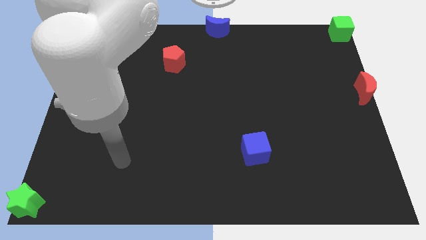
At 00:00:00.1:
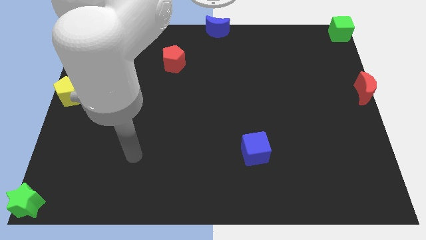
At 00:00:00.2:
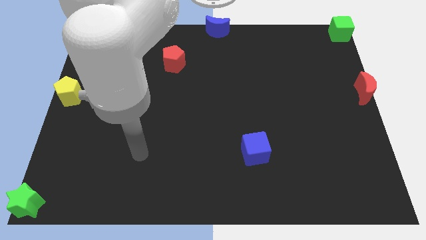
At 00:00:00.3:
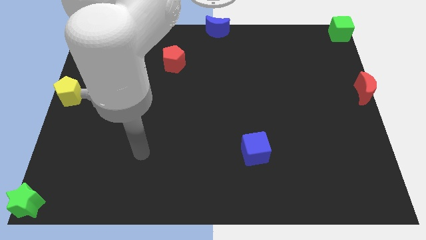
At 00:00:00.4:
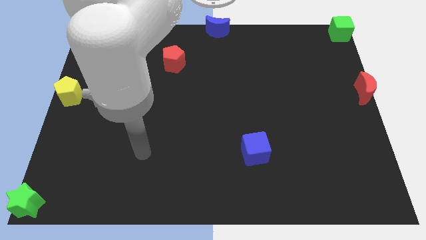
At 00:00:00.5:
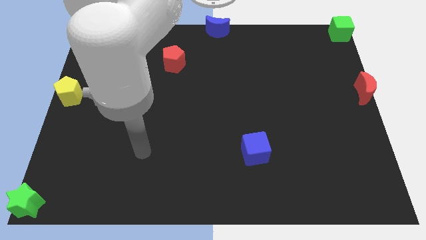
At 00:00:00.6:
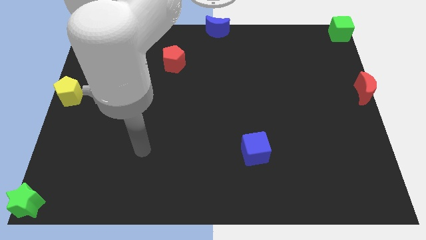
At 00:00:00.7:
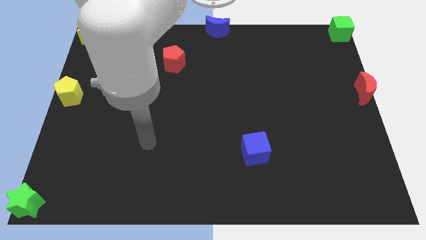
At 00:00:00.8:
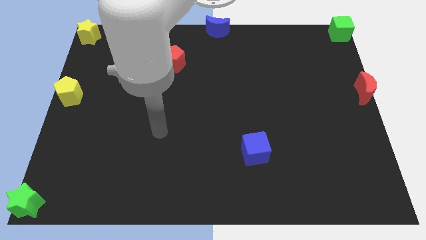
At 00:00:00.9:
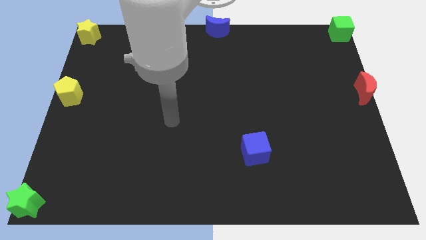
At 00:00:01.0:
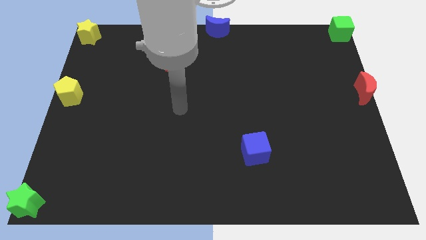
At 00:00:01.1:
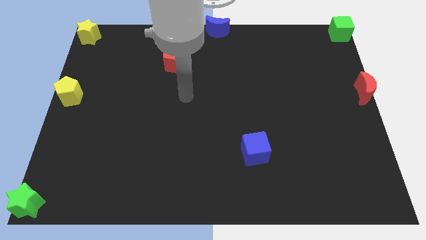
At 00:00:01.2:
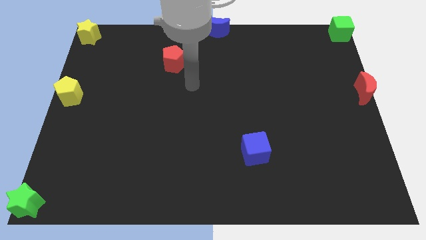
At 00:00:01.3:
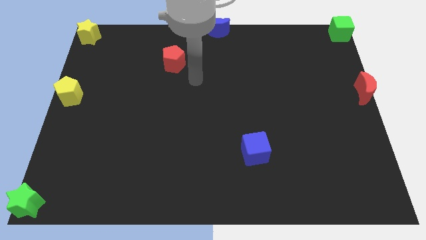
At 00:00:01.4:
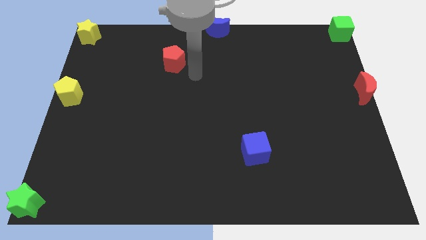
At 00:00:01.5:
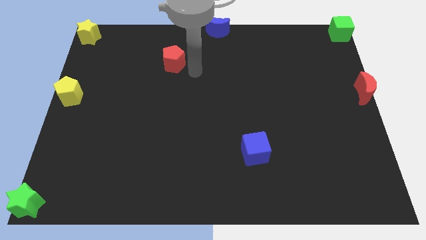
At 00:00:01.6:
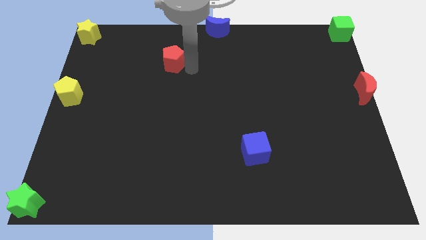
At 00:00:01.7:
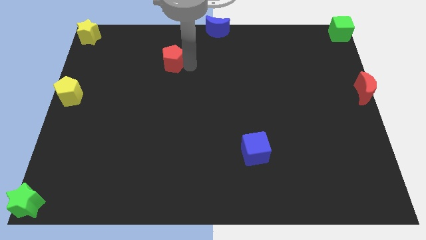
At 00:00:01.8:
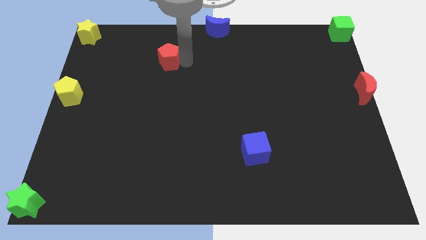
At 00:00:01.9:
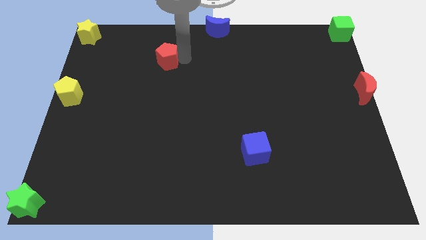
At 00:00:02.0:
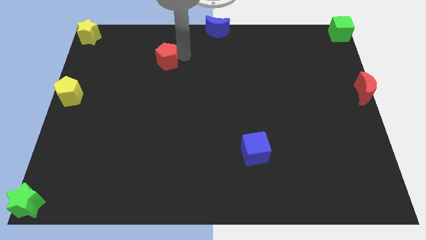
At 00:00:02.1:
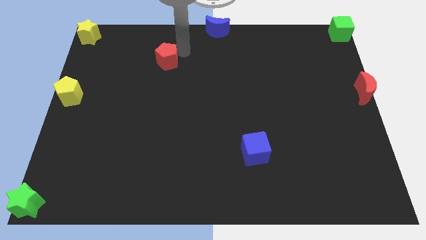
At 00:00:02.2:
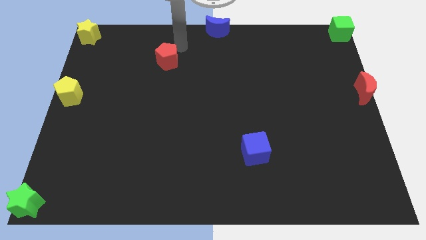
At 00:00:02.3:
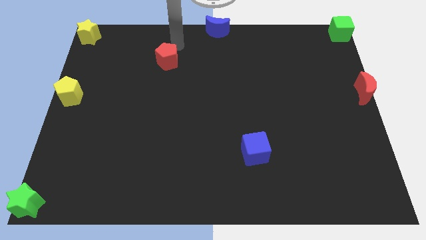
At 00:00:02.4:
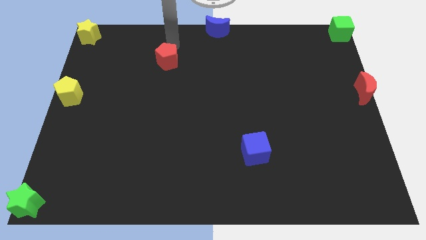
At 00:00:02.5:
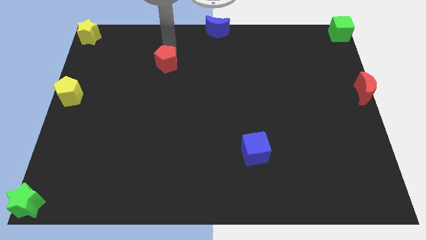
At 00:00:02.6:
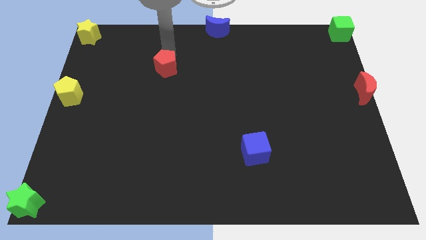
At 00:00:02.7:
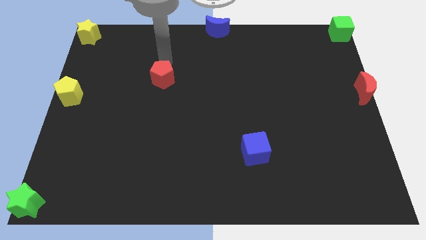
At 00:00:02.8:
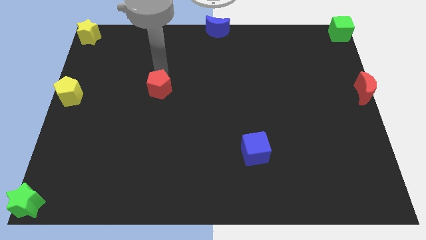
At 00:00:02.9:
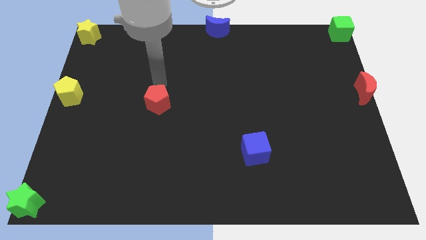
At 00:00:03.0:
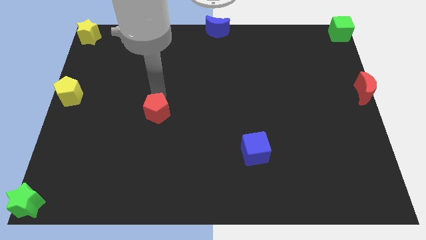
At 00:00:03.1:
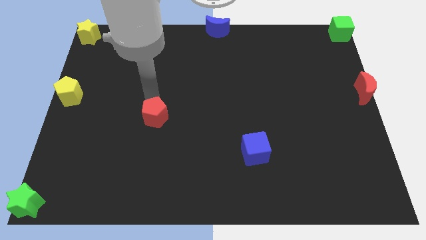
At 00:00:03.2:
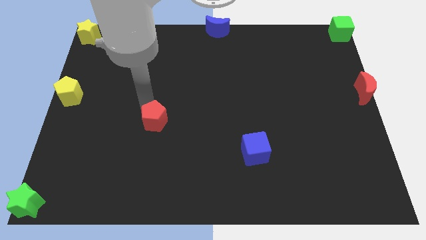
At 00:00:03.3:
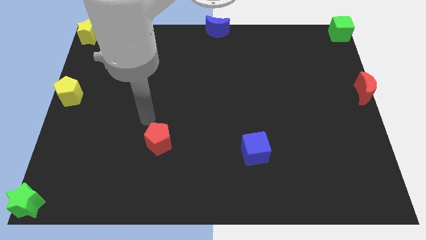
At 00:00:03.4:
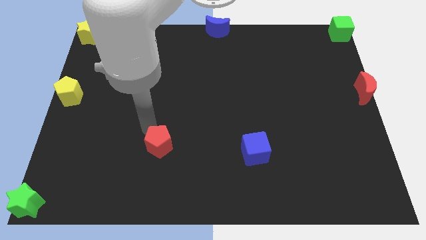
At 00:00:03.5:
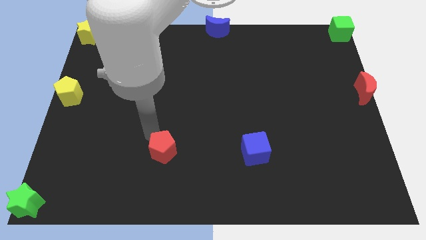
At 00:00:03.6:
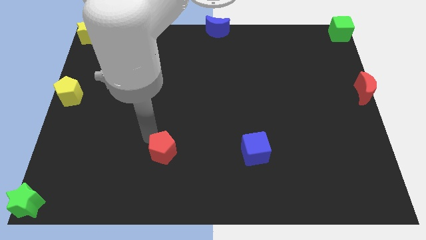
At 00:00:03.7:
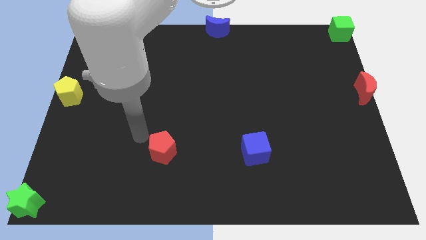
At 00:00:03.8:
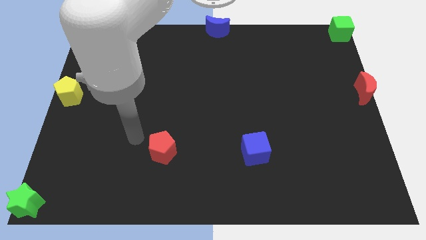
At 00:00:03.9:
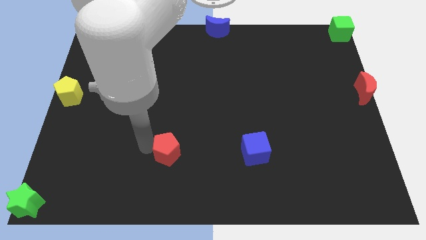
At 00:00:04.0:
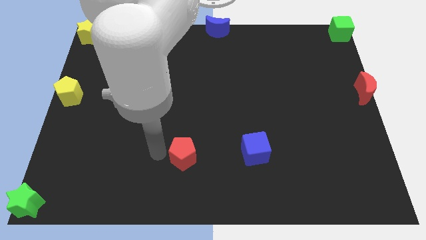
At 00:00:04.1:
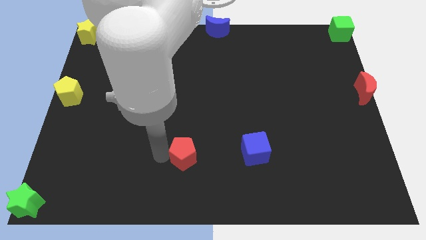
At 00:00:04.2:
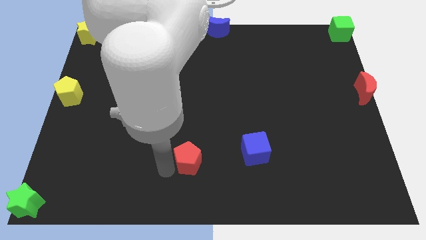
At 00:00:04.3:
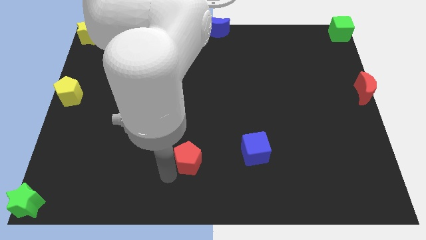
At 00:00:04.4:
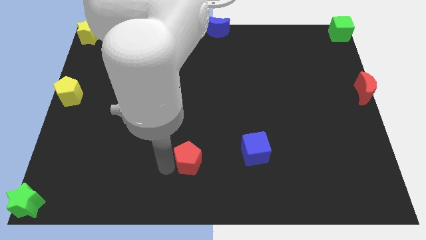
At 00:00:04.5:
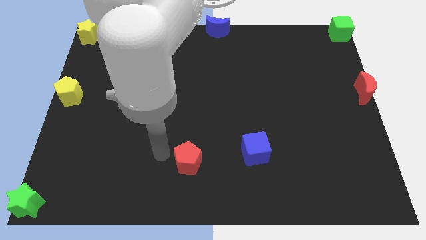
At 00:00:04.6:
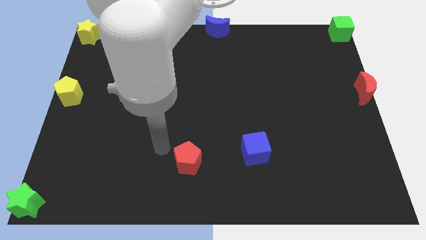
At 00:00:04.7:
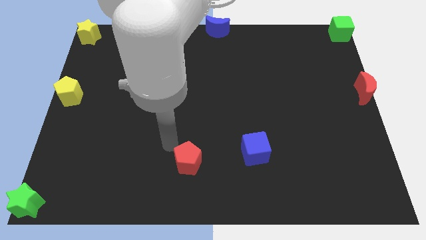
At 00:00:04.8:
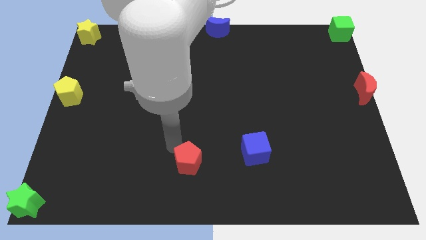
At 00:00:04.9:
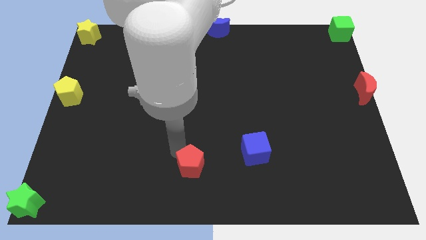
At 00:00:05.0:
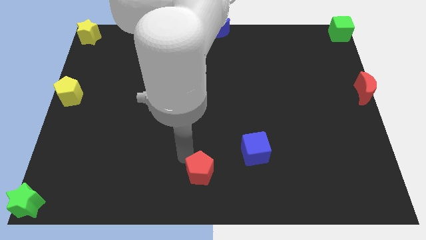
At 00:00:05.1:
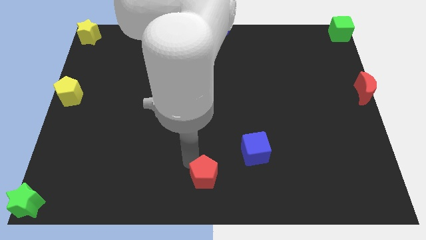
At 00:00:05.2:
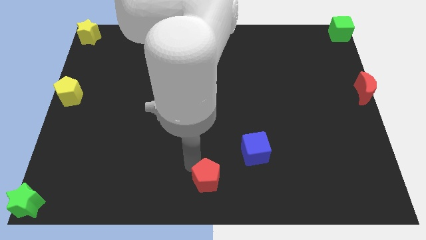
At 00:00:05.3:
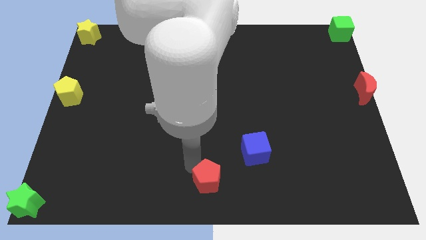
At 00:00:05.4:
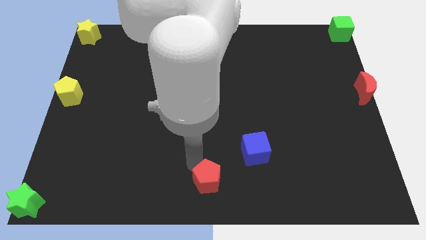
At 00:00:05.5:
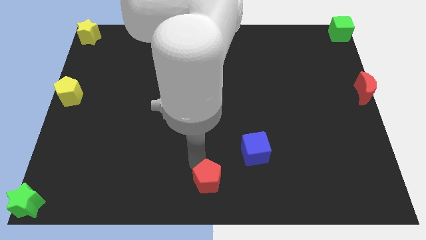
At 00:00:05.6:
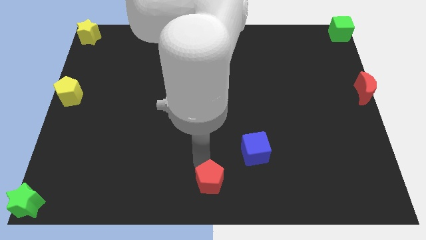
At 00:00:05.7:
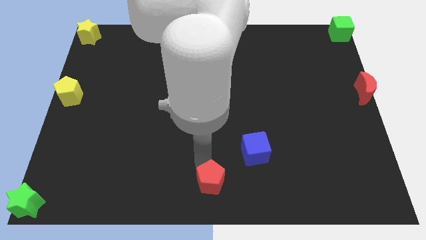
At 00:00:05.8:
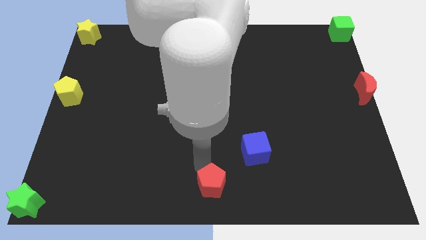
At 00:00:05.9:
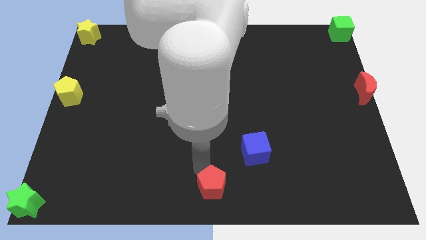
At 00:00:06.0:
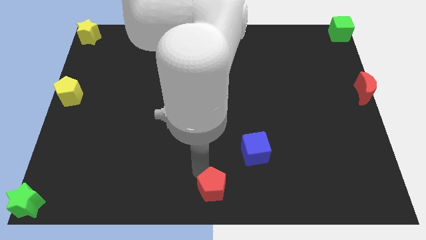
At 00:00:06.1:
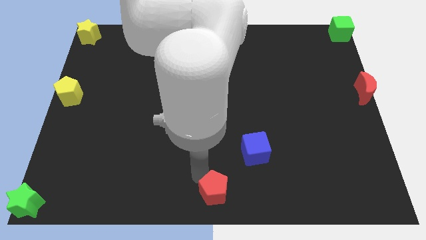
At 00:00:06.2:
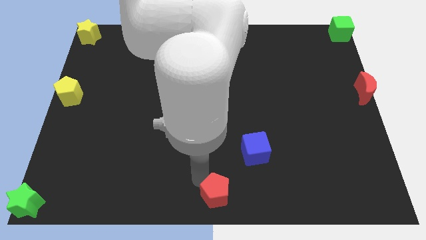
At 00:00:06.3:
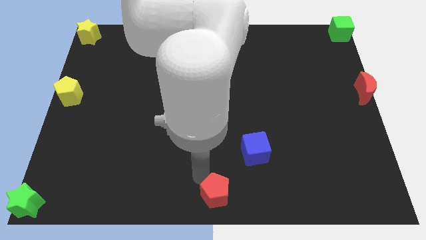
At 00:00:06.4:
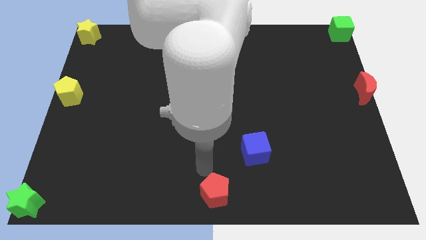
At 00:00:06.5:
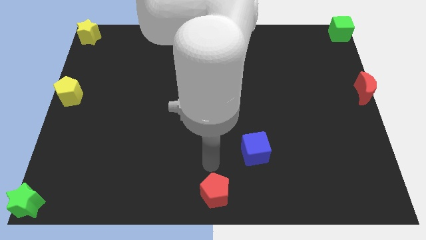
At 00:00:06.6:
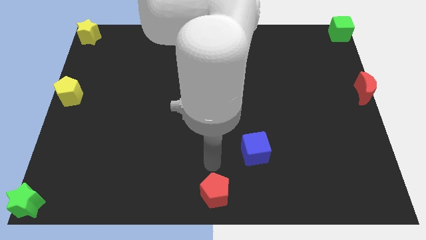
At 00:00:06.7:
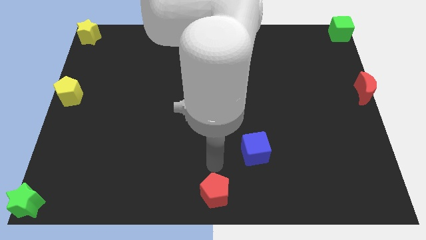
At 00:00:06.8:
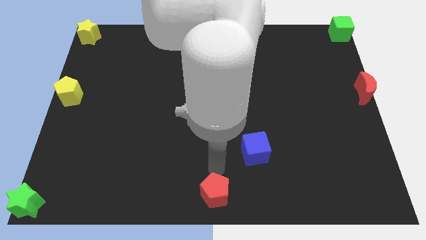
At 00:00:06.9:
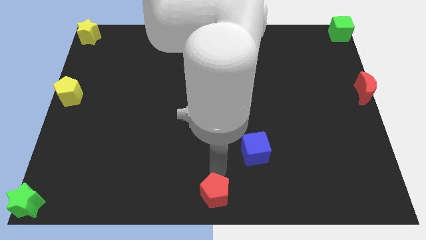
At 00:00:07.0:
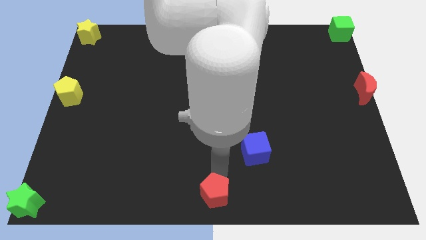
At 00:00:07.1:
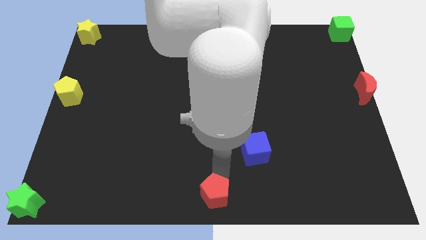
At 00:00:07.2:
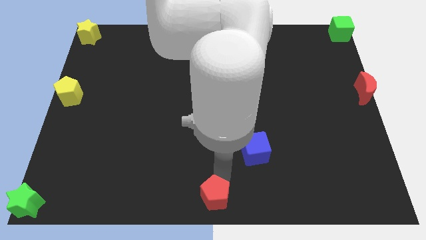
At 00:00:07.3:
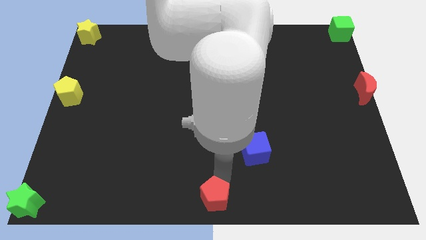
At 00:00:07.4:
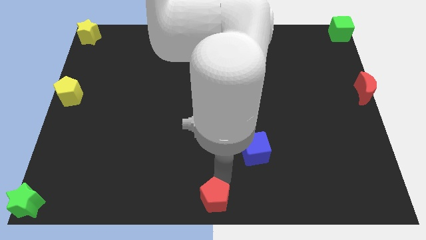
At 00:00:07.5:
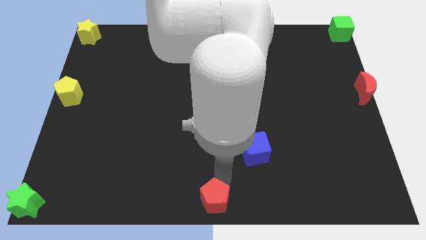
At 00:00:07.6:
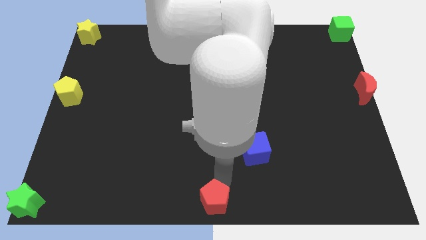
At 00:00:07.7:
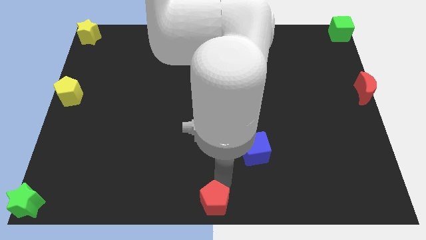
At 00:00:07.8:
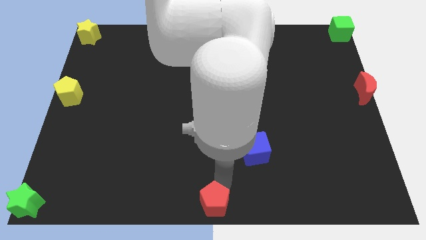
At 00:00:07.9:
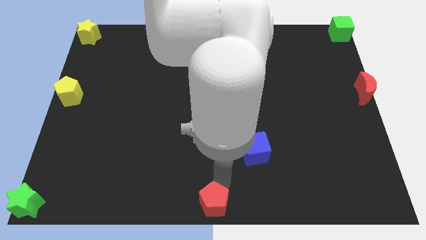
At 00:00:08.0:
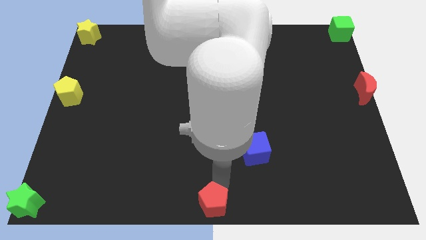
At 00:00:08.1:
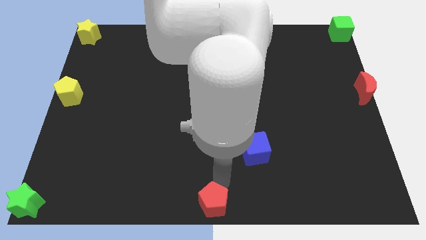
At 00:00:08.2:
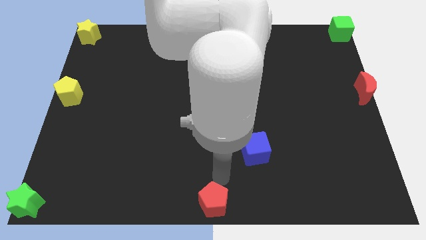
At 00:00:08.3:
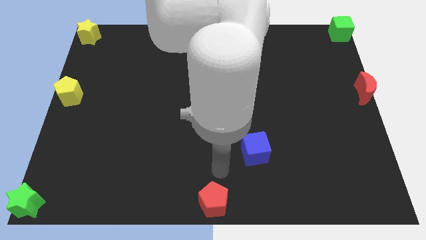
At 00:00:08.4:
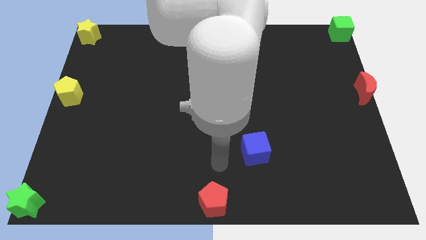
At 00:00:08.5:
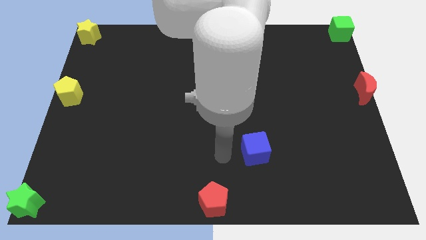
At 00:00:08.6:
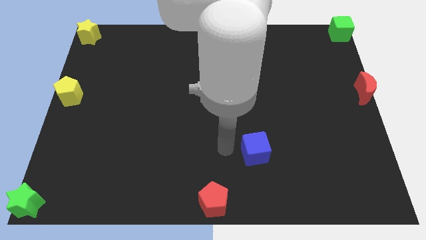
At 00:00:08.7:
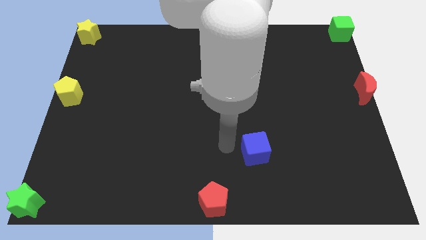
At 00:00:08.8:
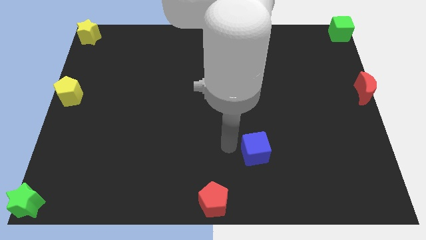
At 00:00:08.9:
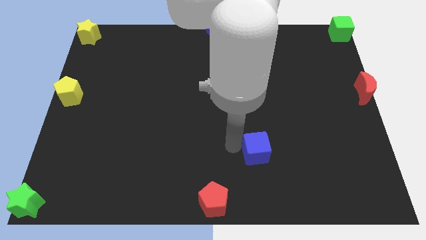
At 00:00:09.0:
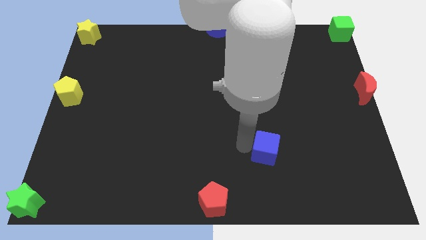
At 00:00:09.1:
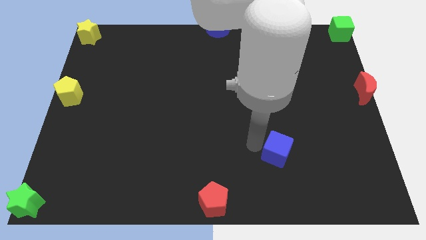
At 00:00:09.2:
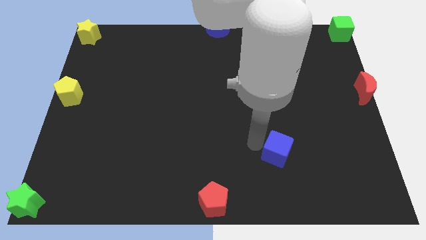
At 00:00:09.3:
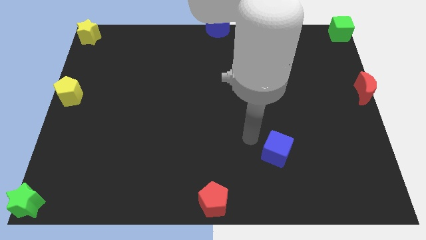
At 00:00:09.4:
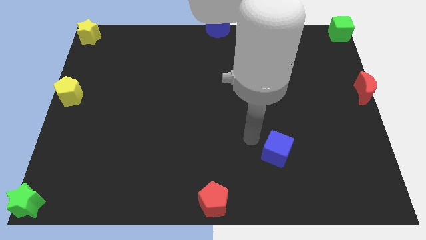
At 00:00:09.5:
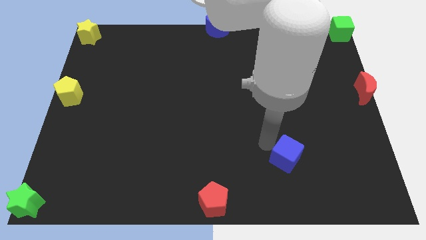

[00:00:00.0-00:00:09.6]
move the red pentagon towards the bottom center
